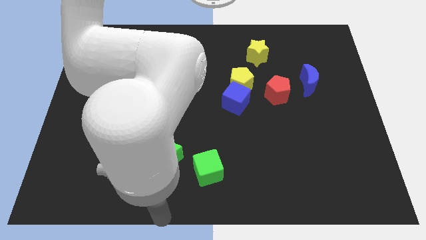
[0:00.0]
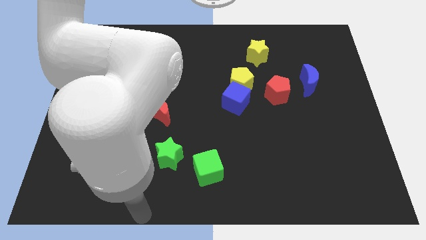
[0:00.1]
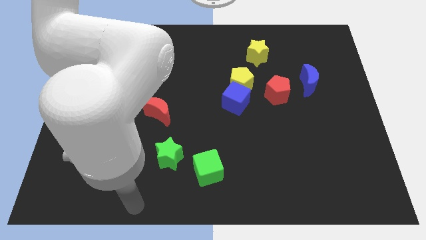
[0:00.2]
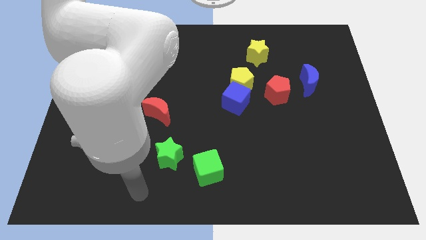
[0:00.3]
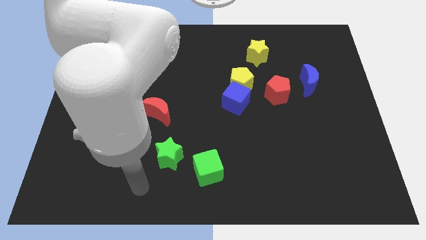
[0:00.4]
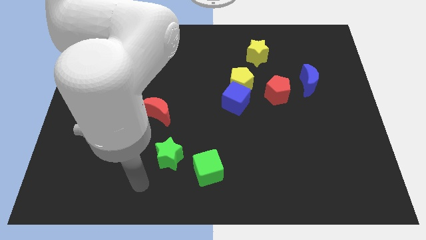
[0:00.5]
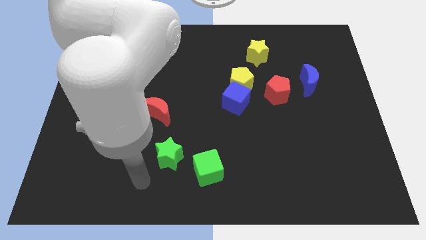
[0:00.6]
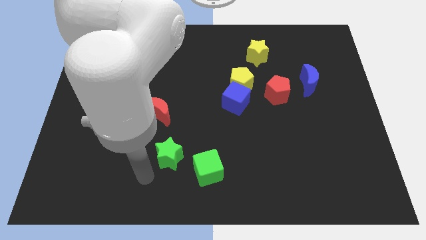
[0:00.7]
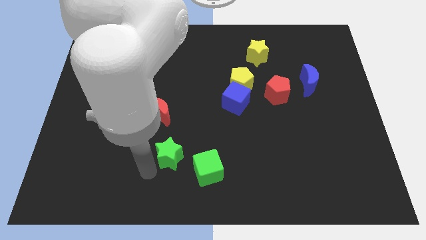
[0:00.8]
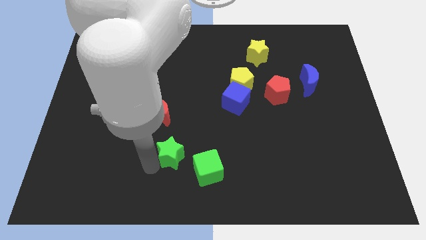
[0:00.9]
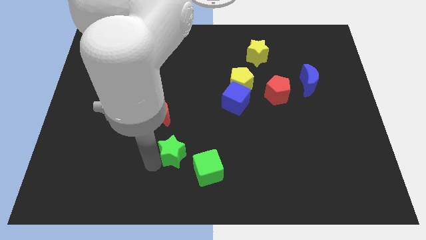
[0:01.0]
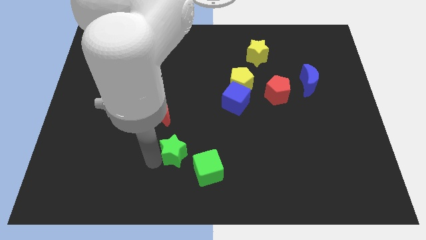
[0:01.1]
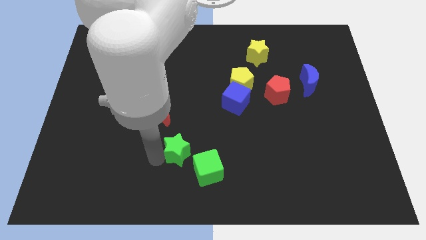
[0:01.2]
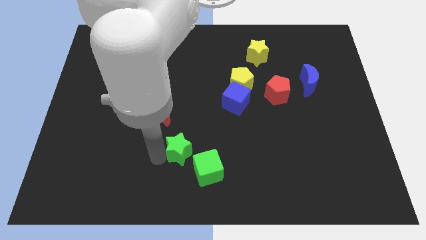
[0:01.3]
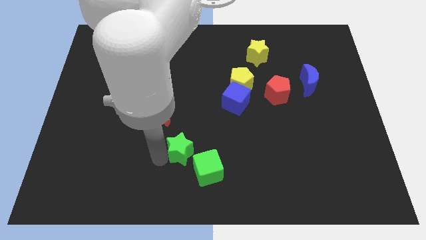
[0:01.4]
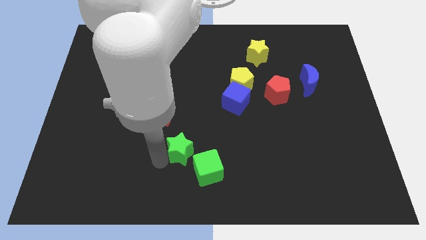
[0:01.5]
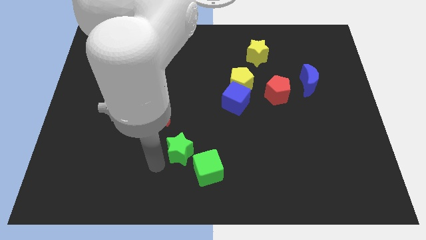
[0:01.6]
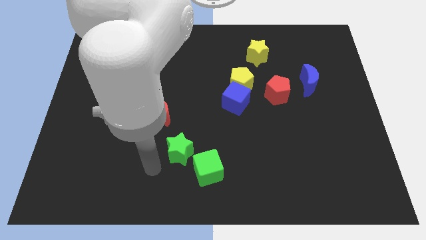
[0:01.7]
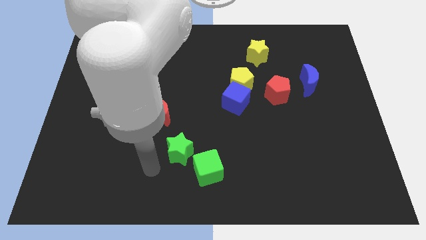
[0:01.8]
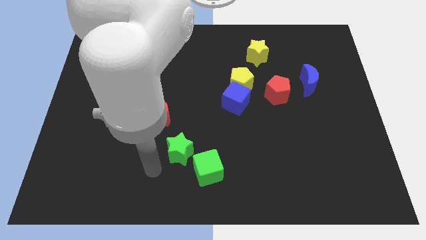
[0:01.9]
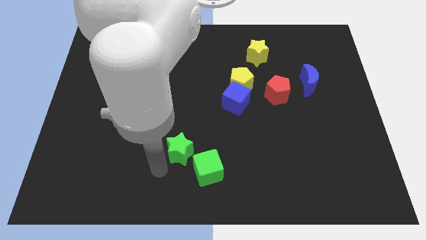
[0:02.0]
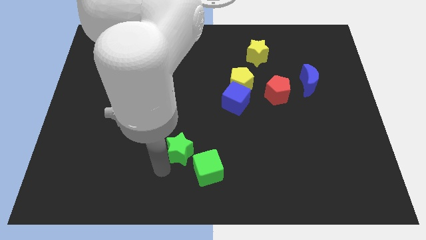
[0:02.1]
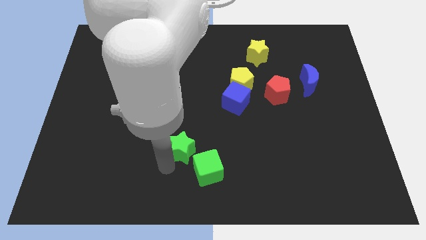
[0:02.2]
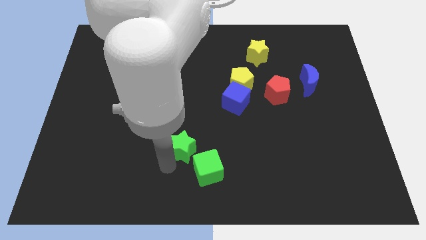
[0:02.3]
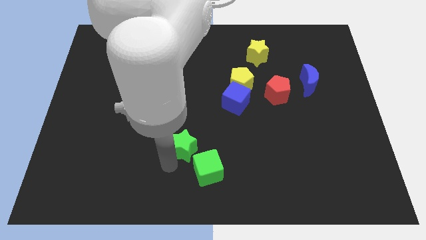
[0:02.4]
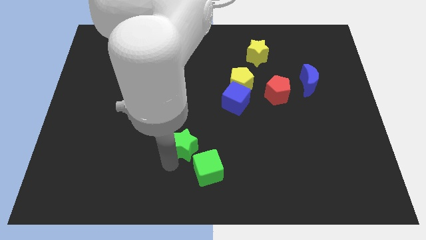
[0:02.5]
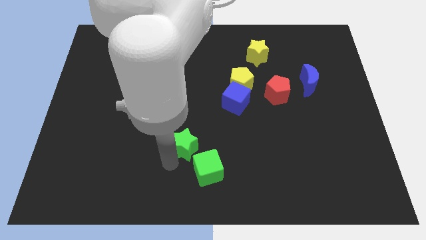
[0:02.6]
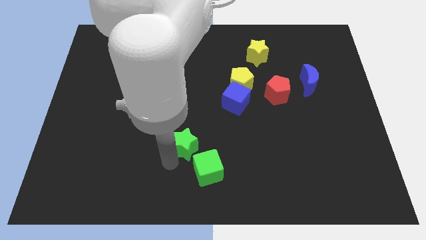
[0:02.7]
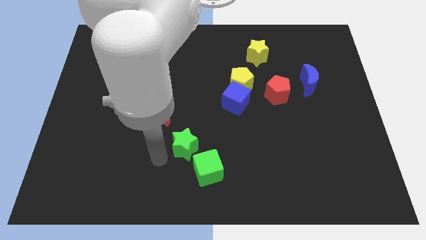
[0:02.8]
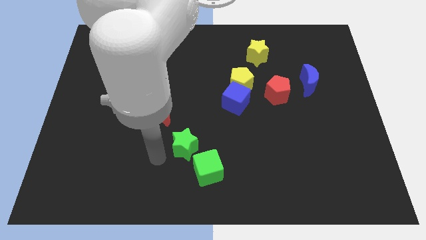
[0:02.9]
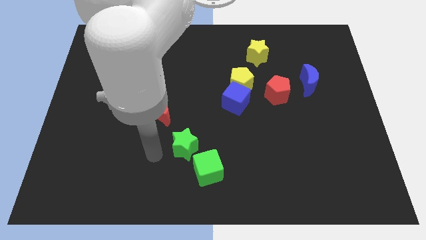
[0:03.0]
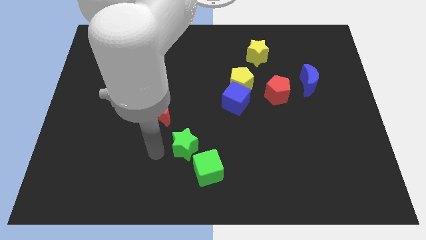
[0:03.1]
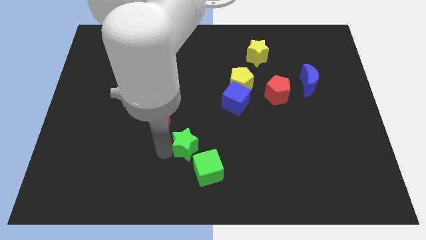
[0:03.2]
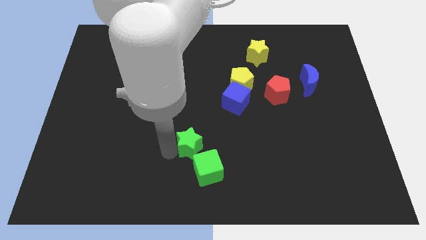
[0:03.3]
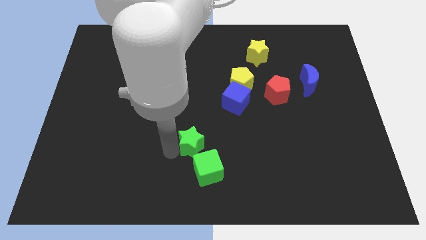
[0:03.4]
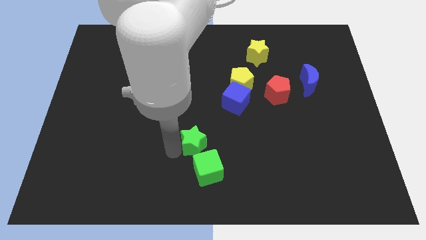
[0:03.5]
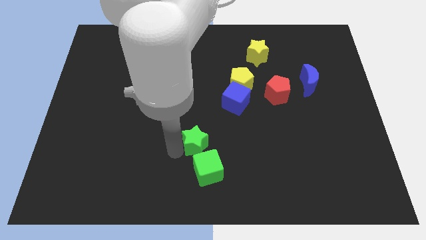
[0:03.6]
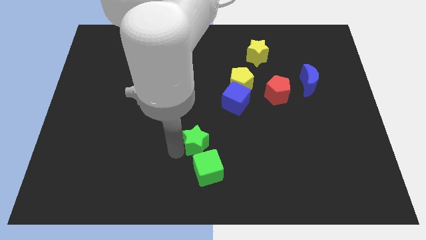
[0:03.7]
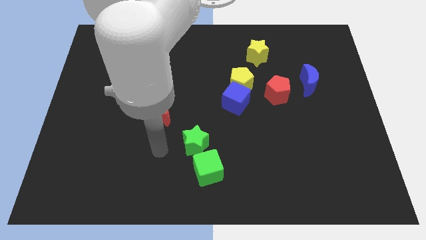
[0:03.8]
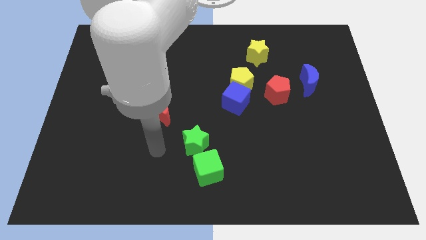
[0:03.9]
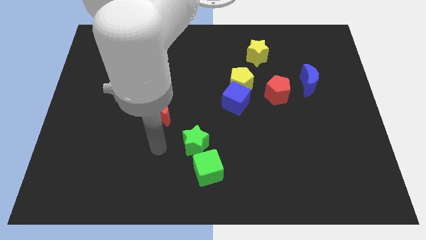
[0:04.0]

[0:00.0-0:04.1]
put the green star vertically above the green cube

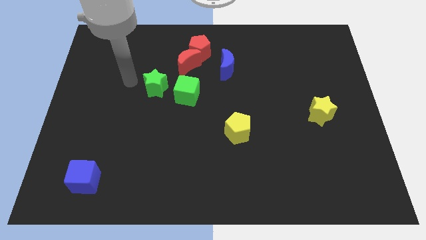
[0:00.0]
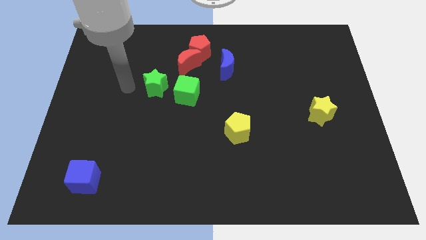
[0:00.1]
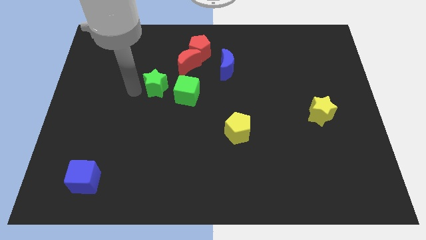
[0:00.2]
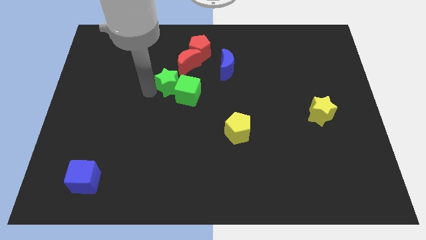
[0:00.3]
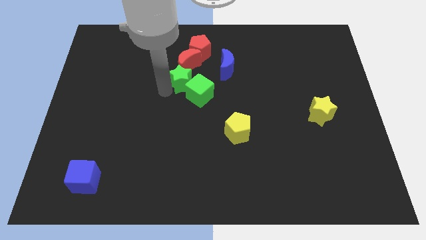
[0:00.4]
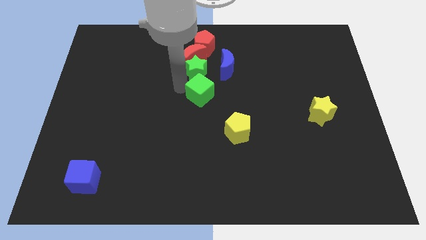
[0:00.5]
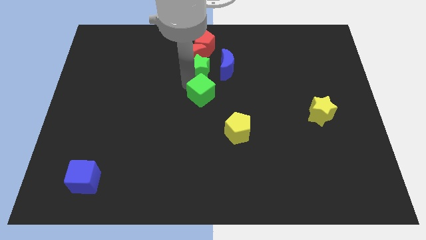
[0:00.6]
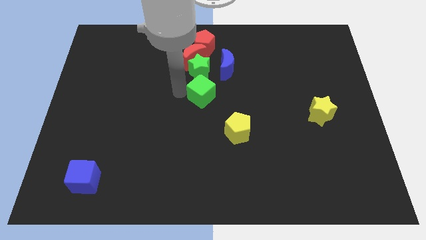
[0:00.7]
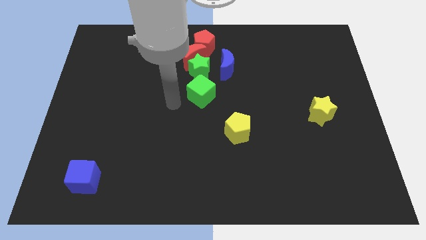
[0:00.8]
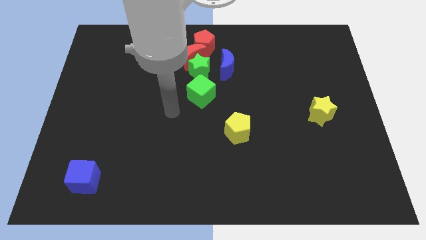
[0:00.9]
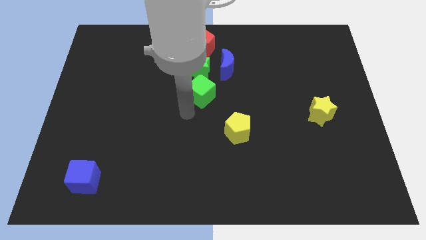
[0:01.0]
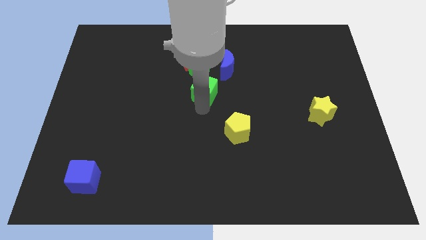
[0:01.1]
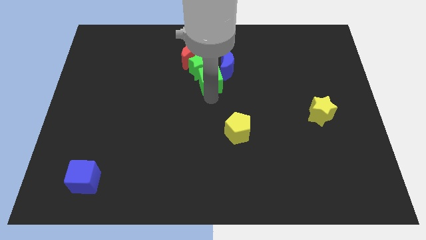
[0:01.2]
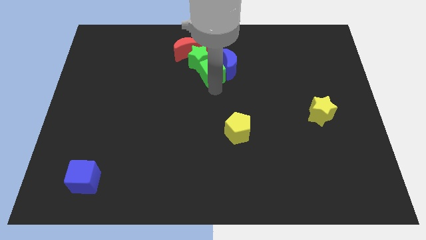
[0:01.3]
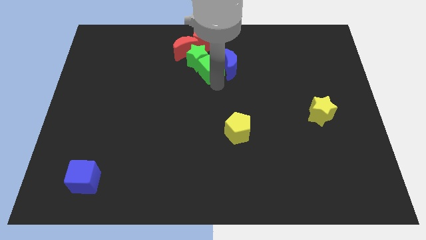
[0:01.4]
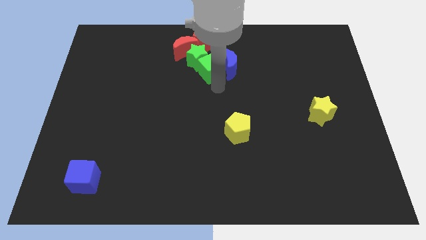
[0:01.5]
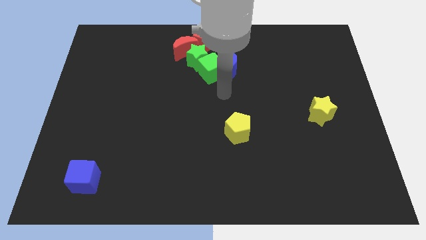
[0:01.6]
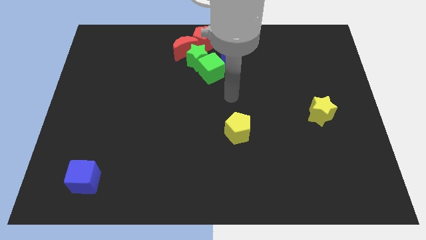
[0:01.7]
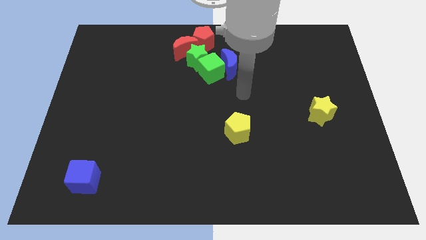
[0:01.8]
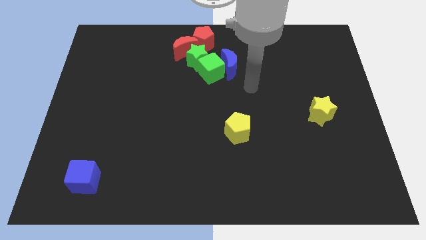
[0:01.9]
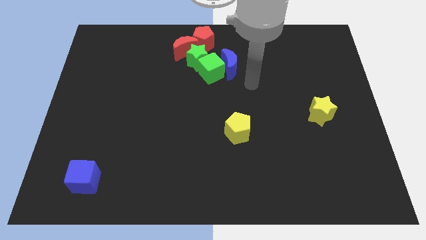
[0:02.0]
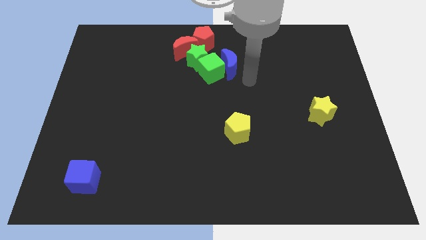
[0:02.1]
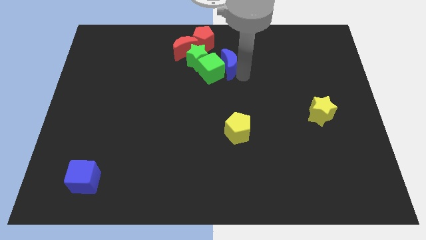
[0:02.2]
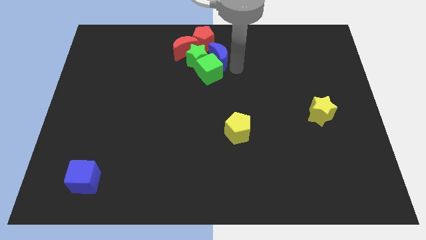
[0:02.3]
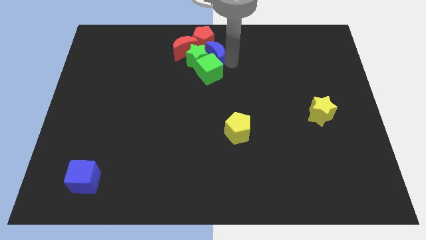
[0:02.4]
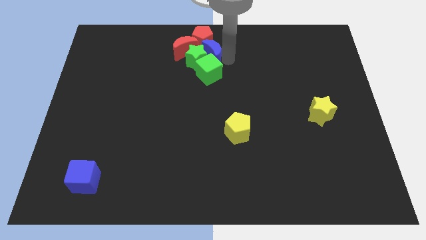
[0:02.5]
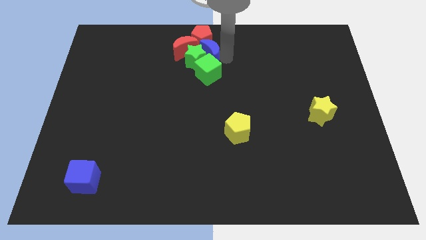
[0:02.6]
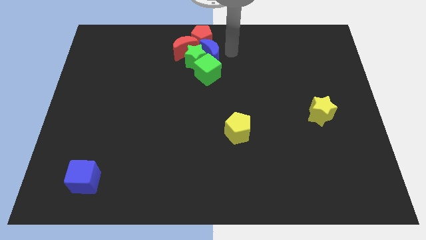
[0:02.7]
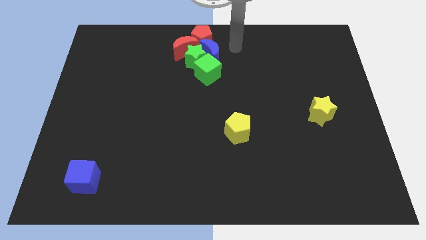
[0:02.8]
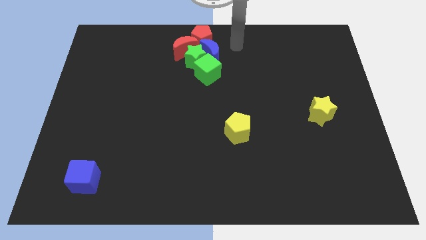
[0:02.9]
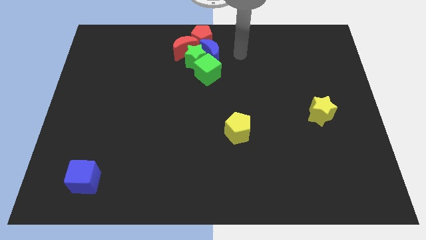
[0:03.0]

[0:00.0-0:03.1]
push the group of blocks into red blocks at the top center

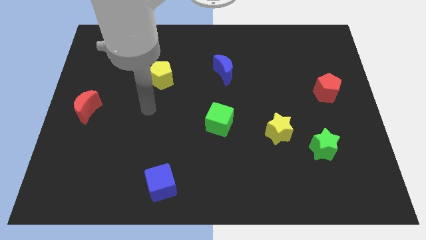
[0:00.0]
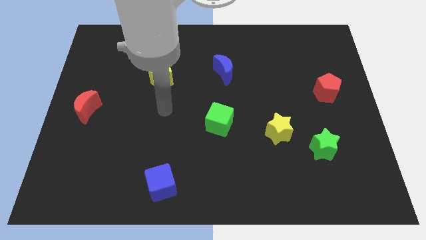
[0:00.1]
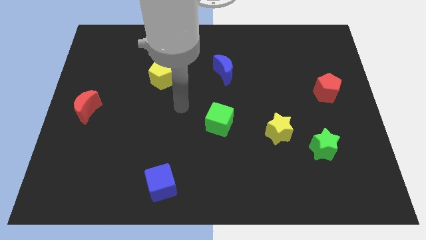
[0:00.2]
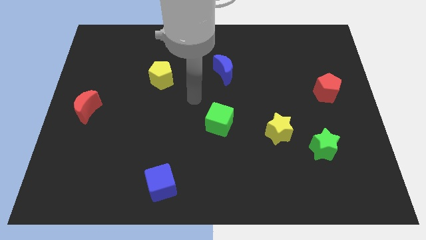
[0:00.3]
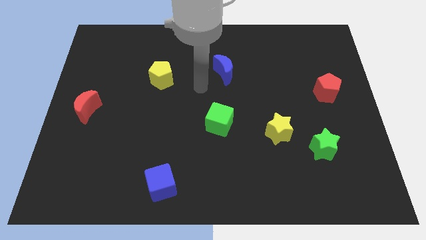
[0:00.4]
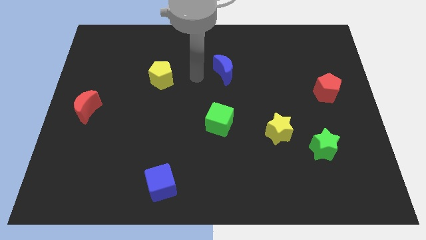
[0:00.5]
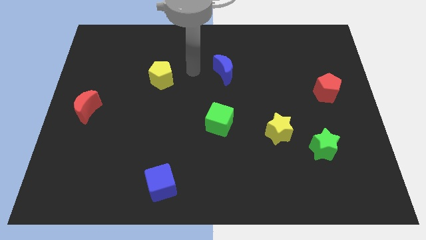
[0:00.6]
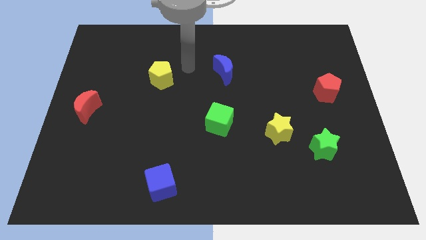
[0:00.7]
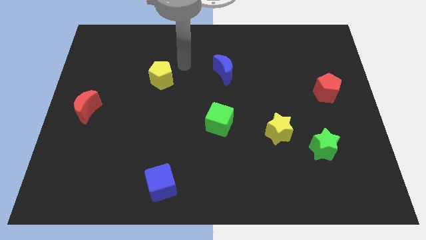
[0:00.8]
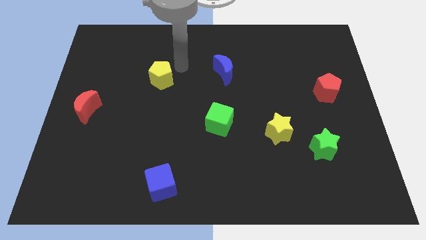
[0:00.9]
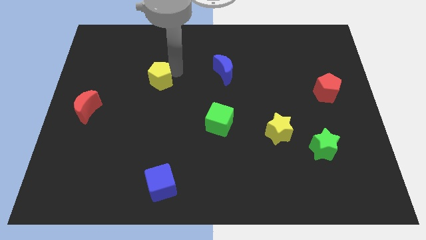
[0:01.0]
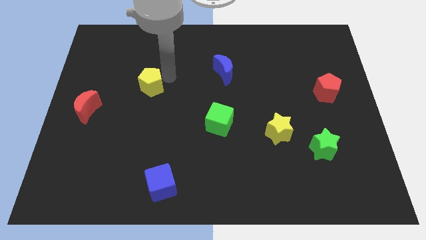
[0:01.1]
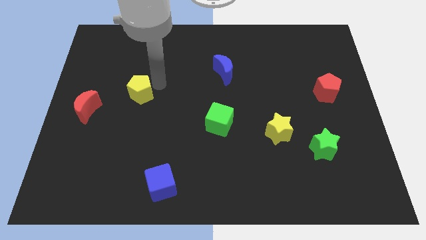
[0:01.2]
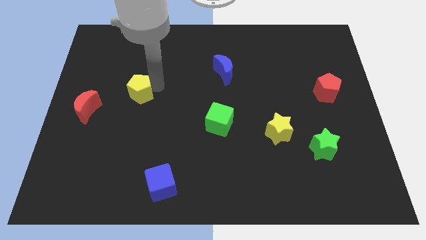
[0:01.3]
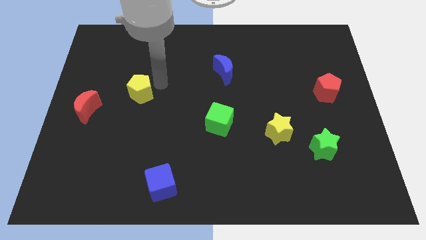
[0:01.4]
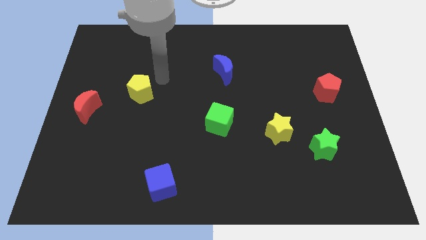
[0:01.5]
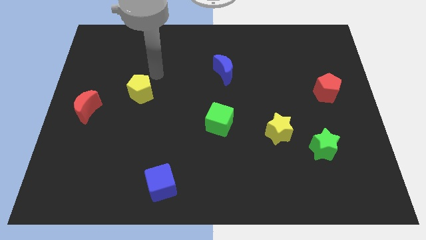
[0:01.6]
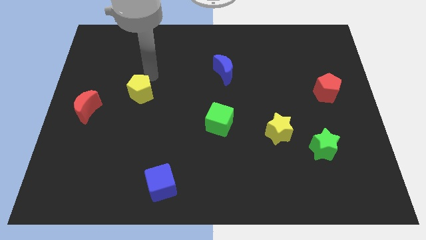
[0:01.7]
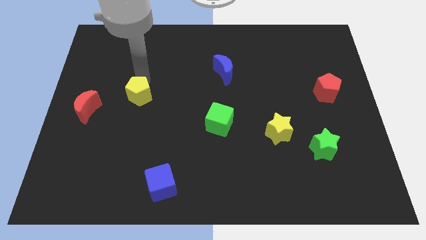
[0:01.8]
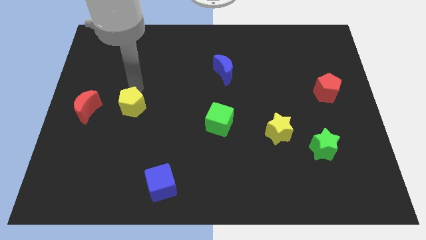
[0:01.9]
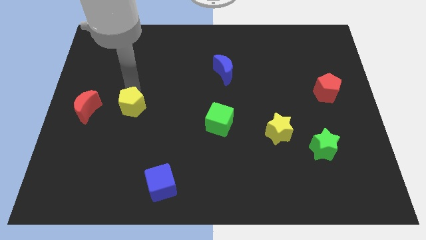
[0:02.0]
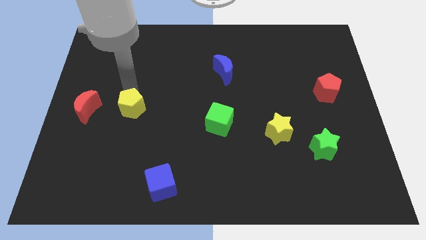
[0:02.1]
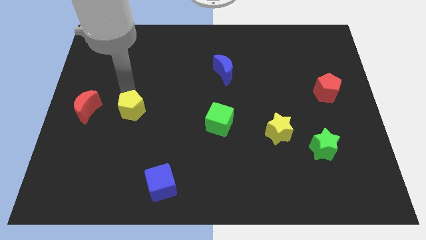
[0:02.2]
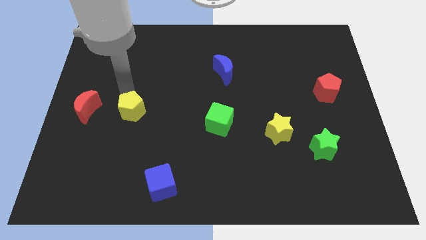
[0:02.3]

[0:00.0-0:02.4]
slightly push the yellow pentagon
